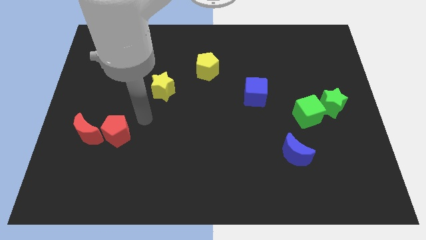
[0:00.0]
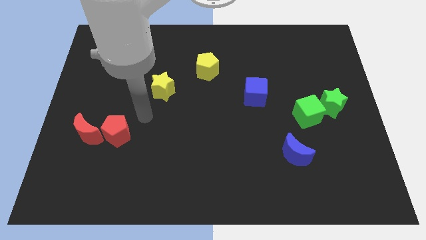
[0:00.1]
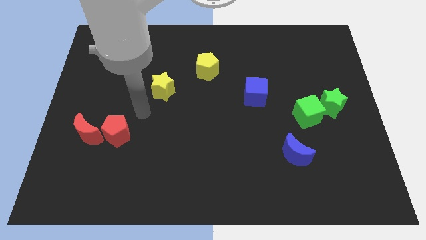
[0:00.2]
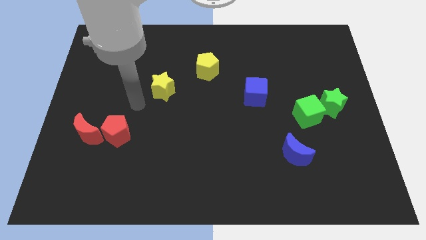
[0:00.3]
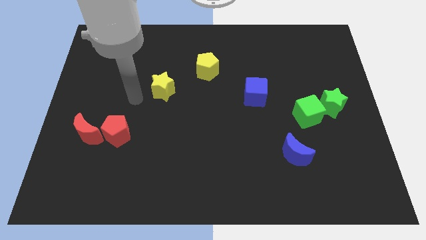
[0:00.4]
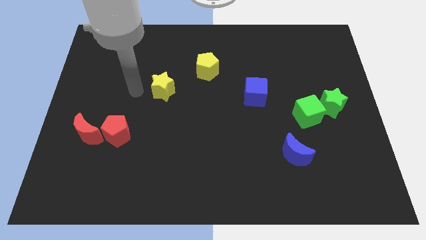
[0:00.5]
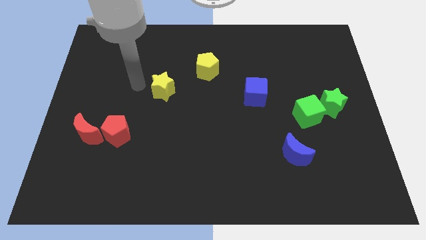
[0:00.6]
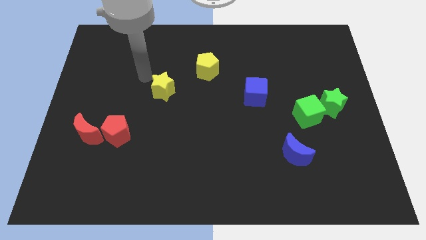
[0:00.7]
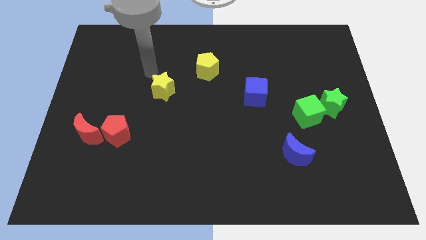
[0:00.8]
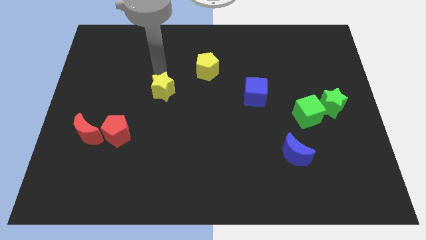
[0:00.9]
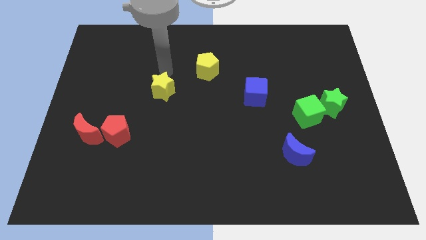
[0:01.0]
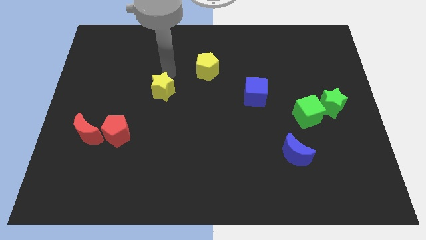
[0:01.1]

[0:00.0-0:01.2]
put arm above yellow star

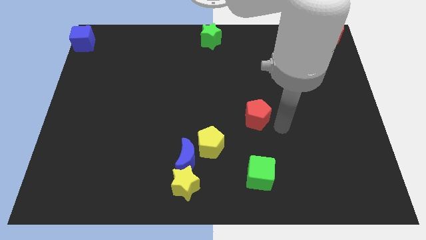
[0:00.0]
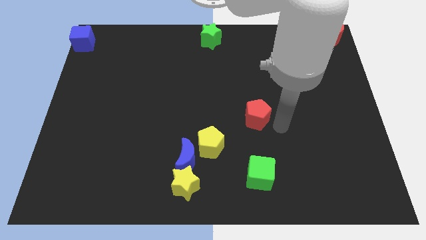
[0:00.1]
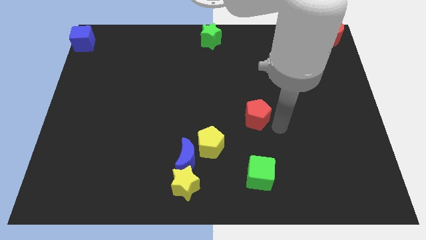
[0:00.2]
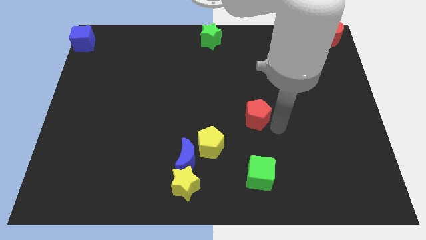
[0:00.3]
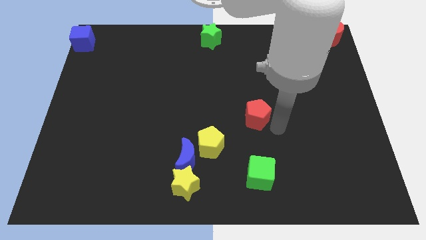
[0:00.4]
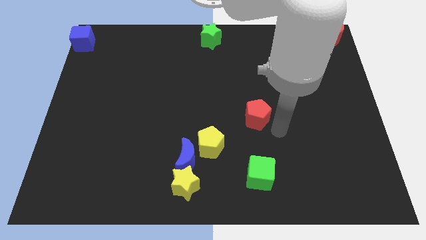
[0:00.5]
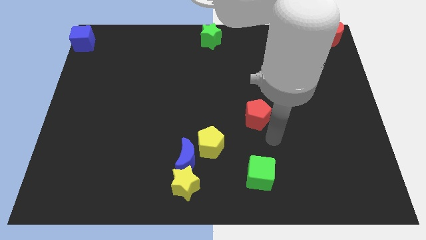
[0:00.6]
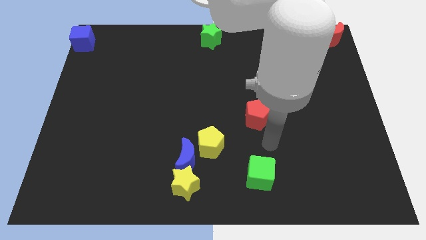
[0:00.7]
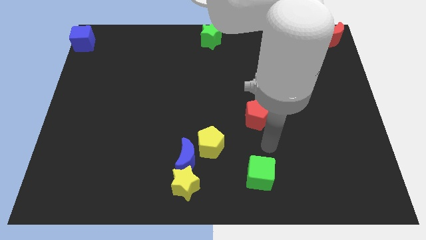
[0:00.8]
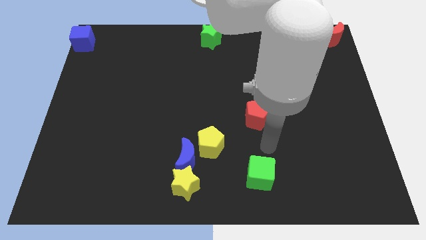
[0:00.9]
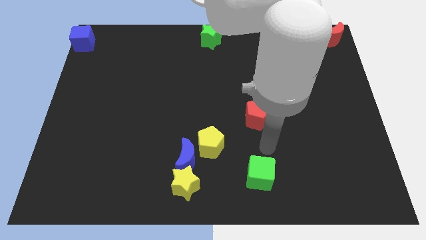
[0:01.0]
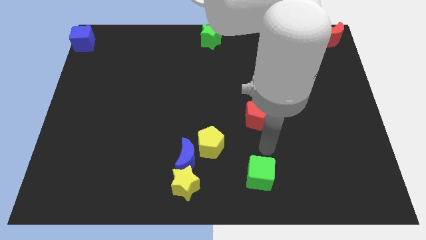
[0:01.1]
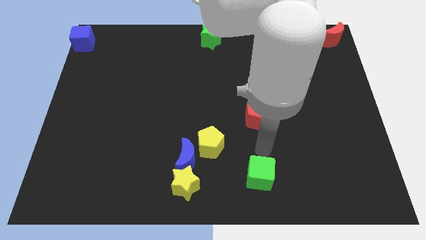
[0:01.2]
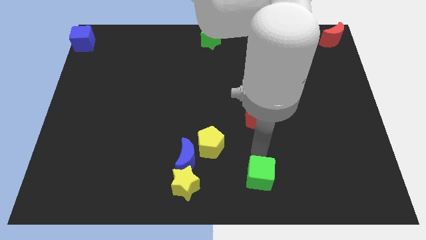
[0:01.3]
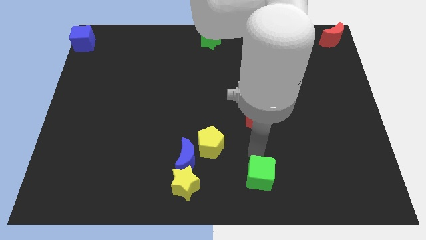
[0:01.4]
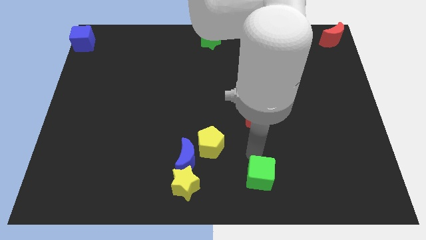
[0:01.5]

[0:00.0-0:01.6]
place your hand in between the red pentagon and the green cube

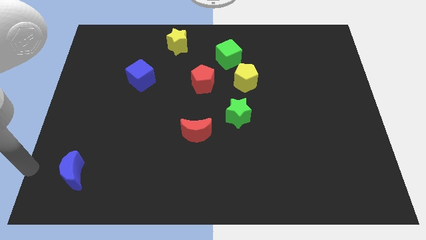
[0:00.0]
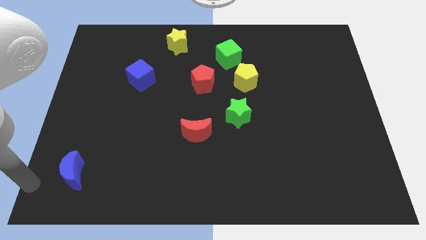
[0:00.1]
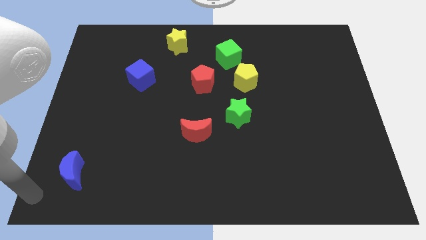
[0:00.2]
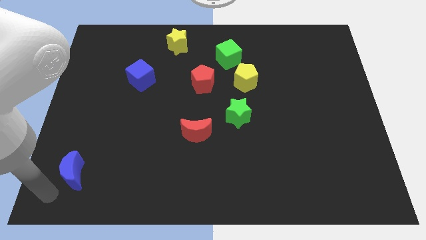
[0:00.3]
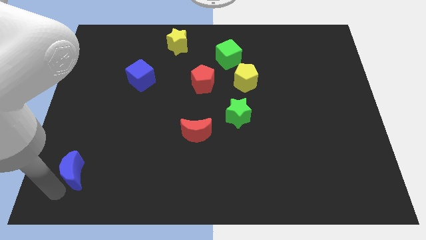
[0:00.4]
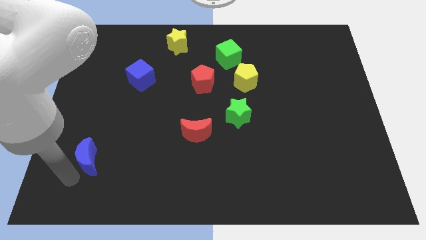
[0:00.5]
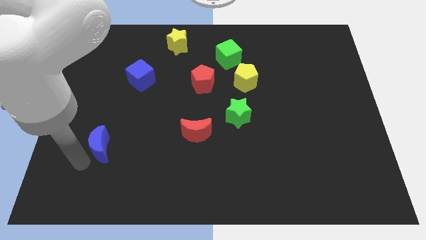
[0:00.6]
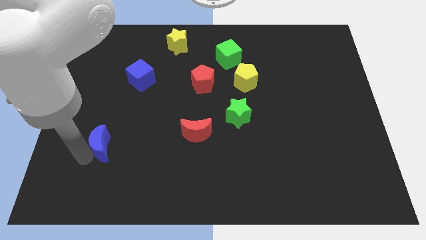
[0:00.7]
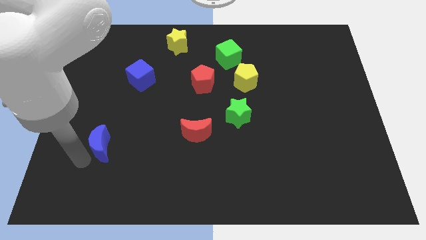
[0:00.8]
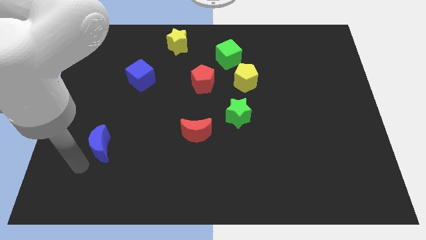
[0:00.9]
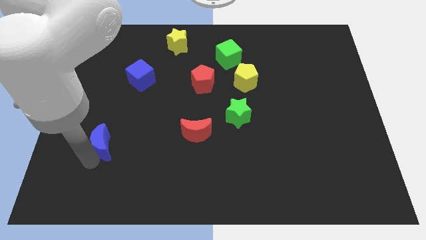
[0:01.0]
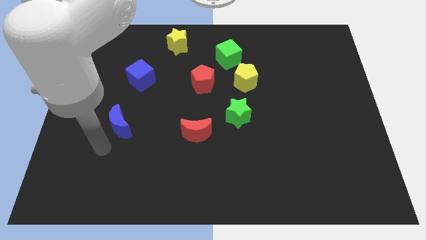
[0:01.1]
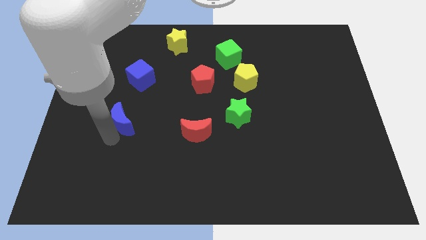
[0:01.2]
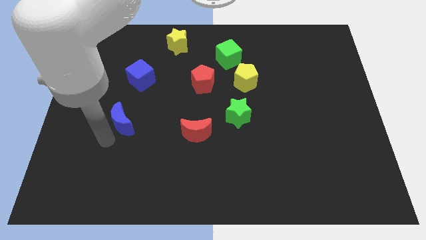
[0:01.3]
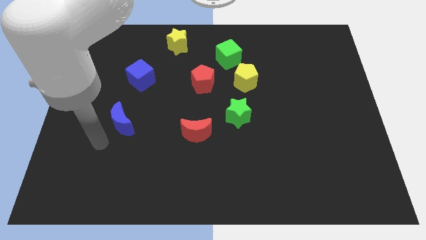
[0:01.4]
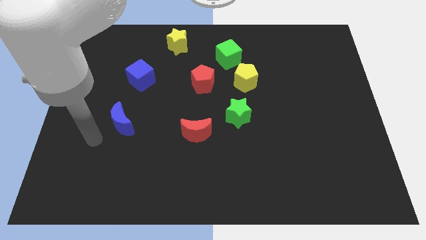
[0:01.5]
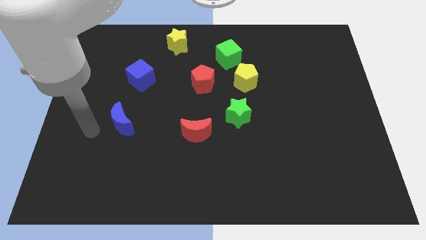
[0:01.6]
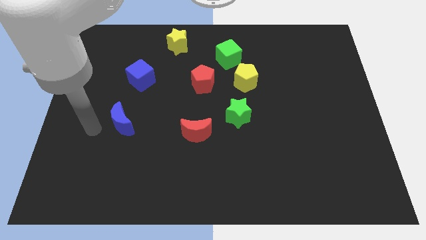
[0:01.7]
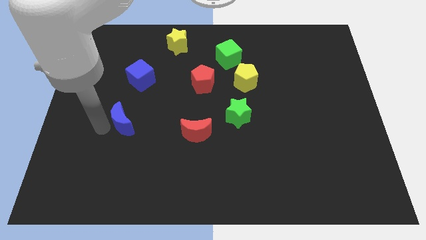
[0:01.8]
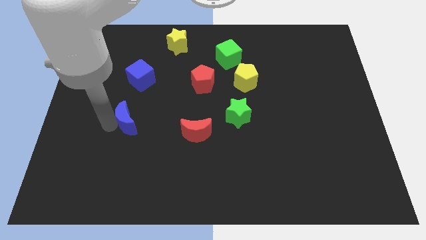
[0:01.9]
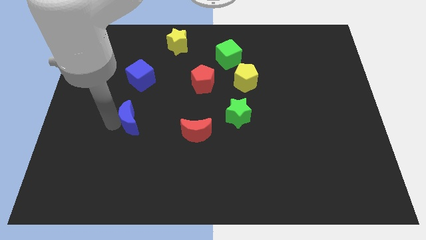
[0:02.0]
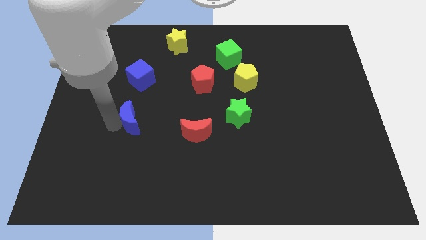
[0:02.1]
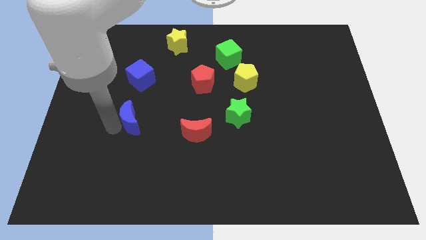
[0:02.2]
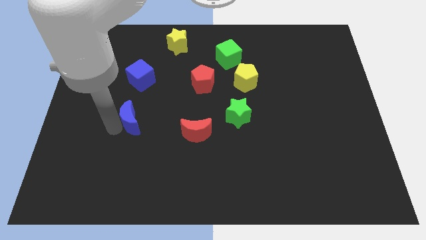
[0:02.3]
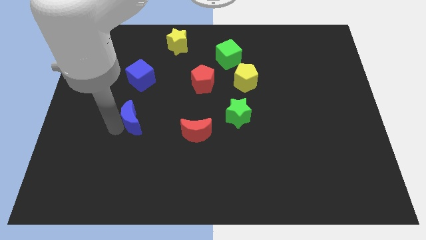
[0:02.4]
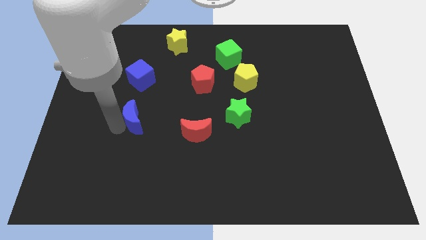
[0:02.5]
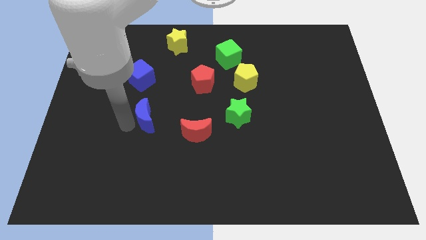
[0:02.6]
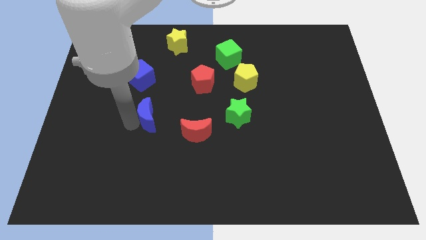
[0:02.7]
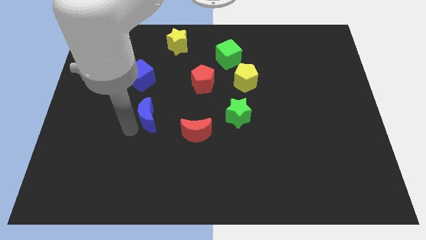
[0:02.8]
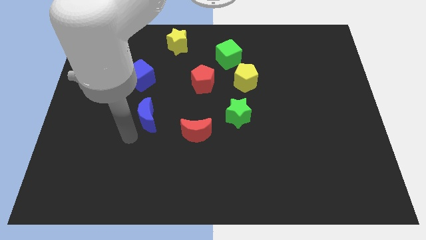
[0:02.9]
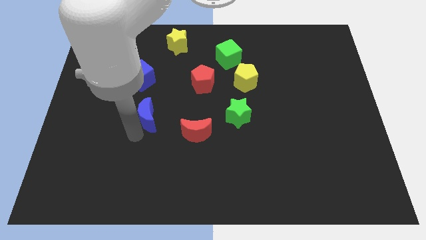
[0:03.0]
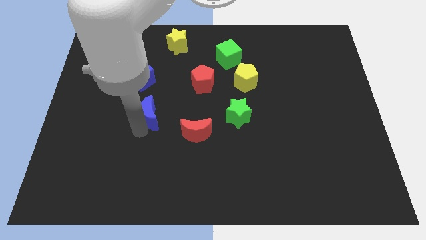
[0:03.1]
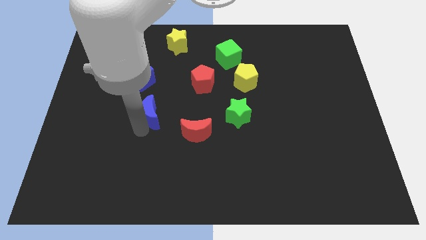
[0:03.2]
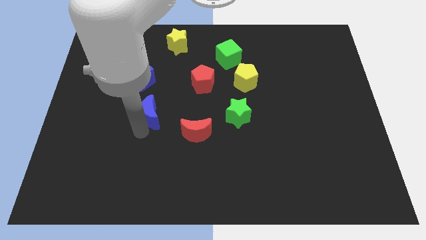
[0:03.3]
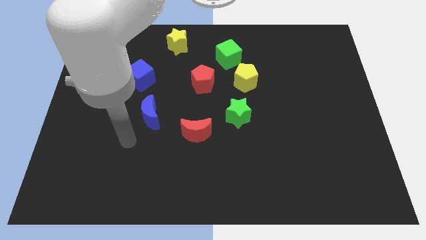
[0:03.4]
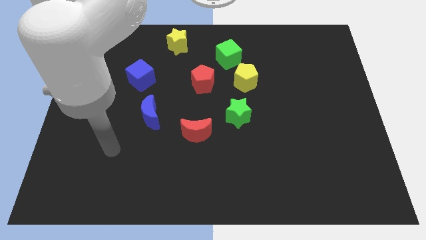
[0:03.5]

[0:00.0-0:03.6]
place the blue moon diagonal to the left of the green star

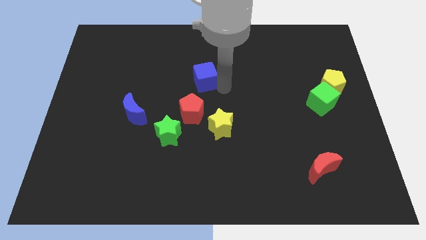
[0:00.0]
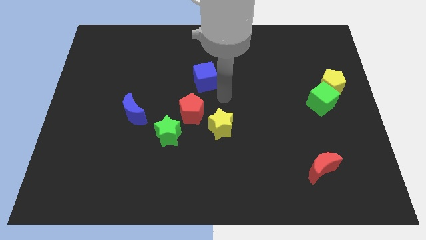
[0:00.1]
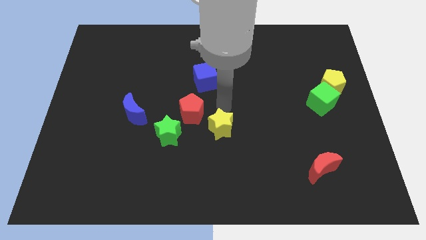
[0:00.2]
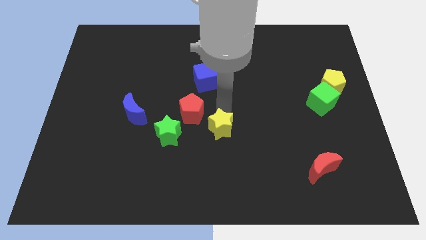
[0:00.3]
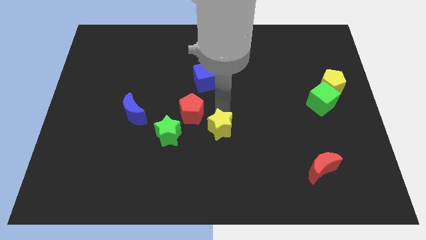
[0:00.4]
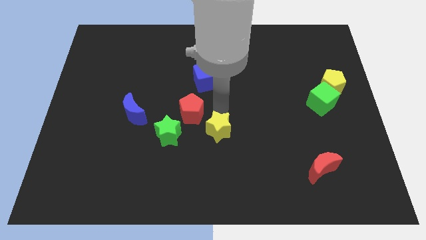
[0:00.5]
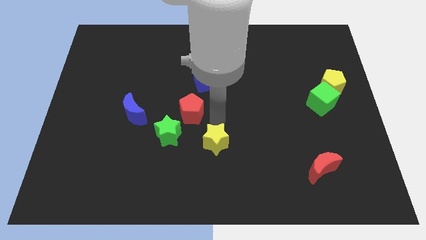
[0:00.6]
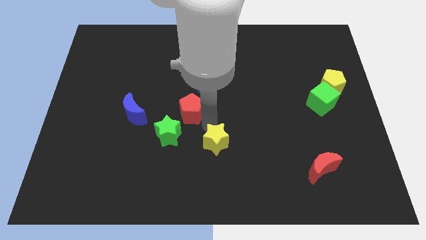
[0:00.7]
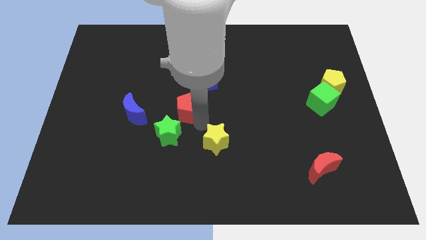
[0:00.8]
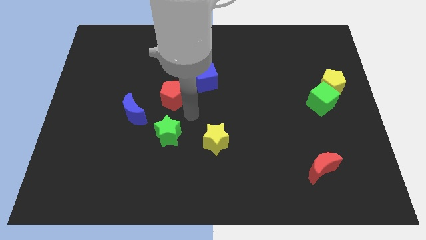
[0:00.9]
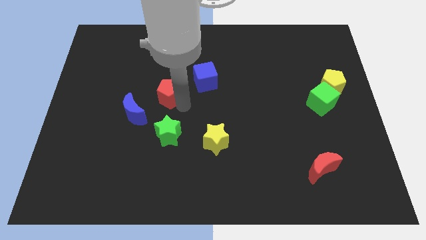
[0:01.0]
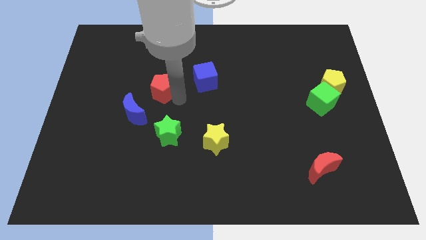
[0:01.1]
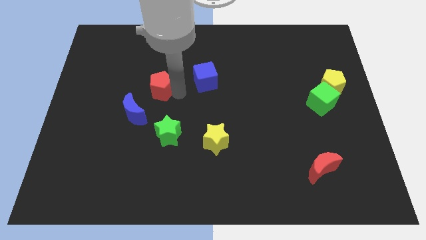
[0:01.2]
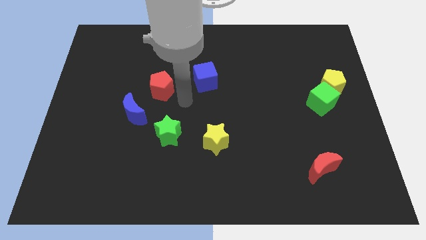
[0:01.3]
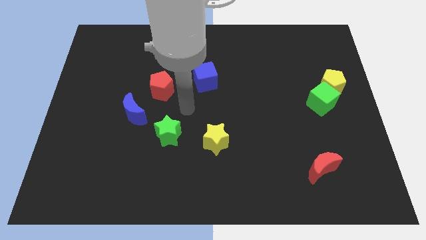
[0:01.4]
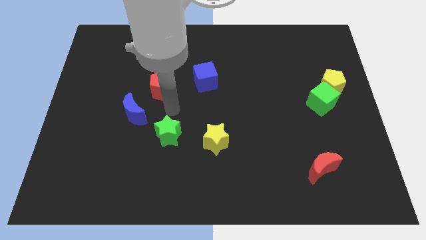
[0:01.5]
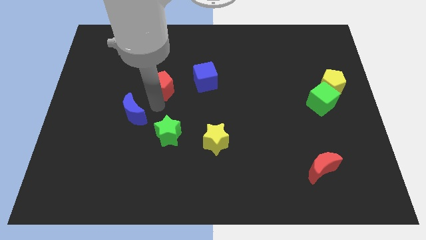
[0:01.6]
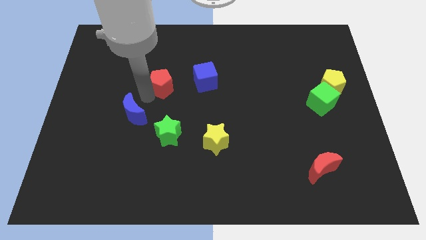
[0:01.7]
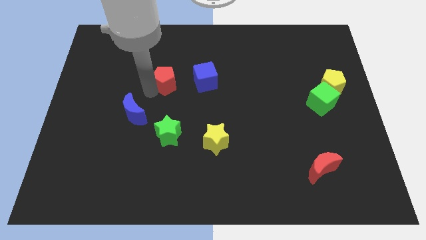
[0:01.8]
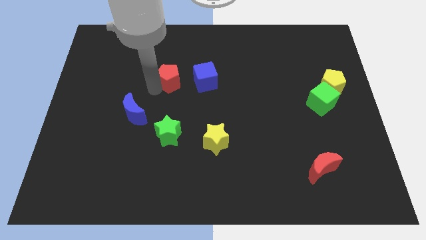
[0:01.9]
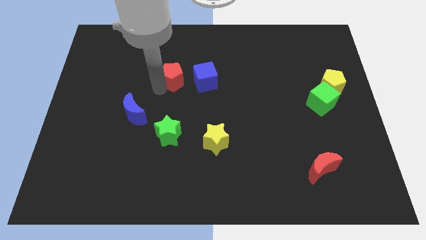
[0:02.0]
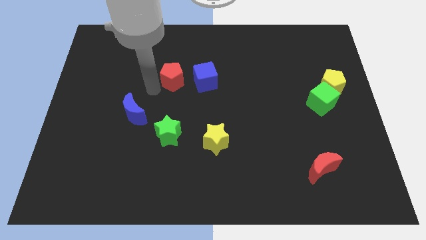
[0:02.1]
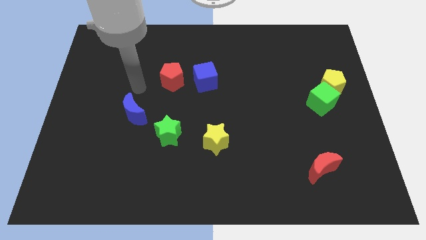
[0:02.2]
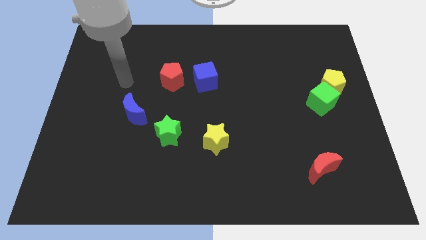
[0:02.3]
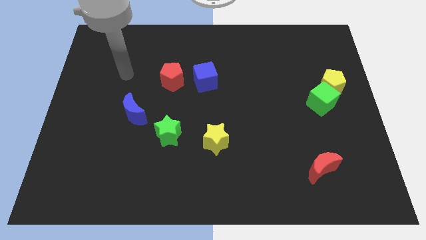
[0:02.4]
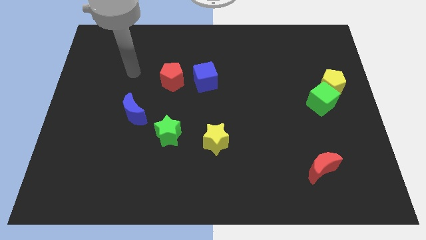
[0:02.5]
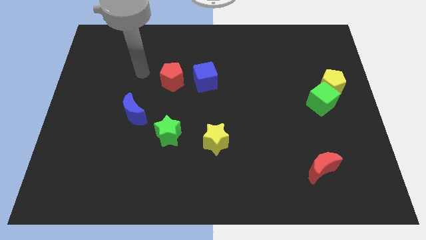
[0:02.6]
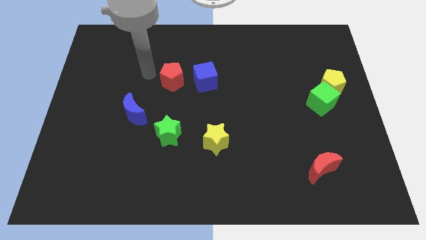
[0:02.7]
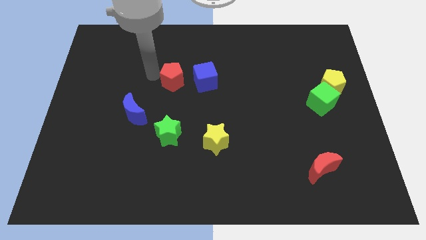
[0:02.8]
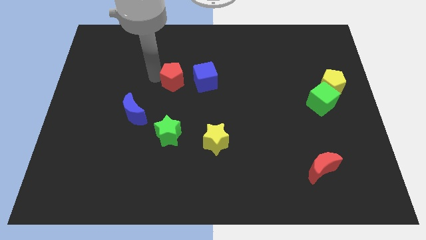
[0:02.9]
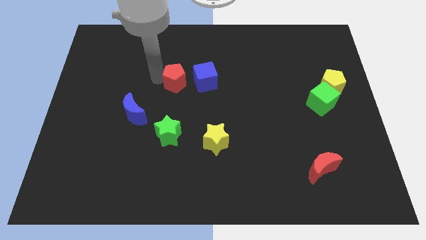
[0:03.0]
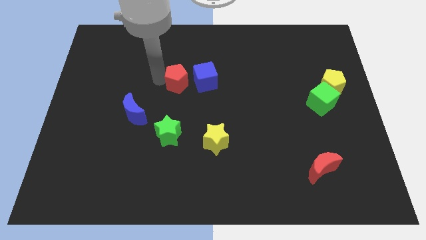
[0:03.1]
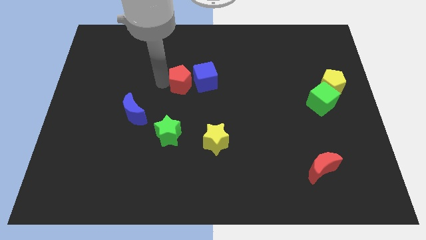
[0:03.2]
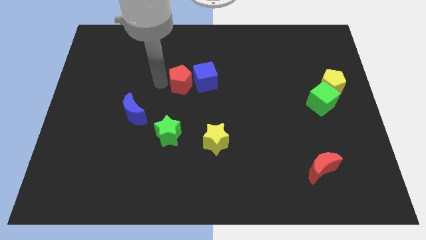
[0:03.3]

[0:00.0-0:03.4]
move the red pentagon left to the blue cube
